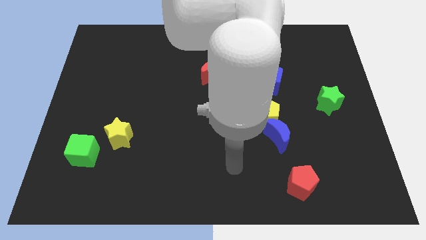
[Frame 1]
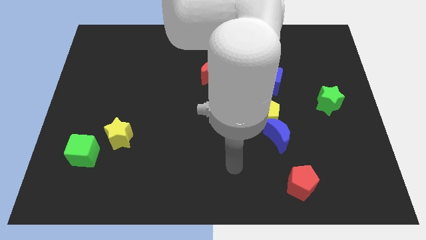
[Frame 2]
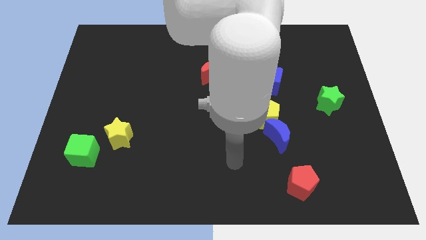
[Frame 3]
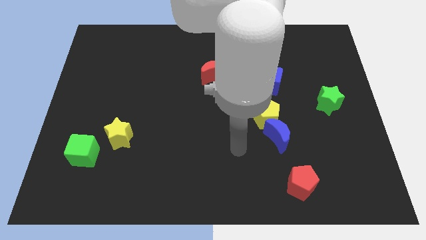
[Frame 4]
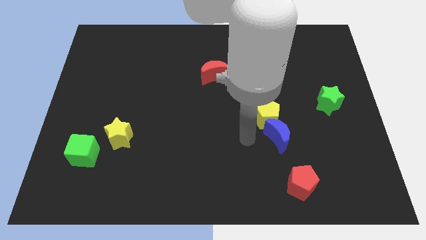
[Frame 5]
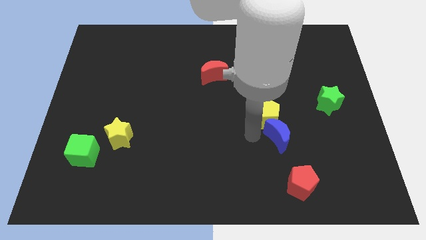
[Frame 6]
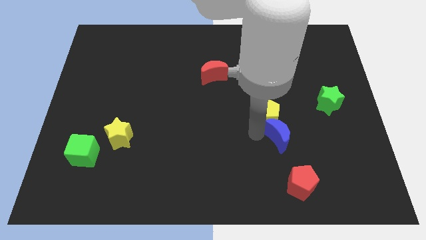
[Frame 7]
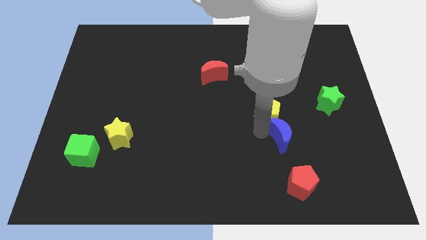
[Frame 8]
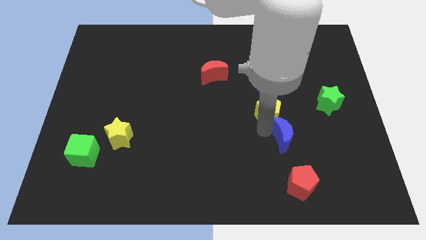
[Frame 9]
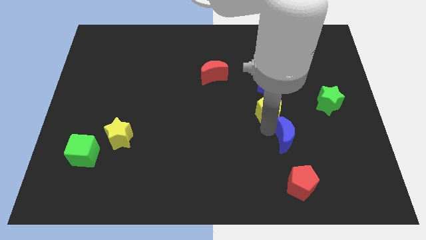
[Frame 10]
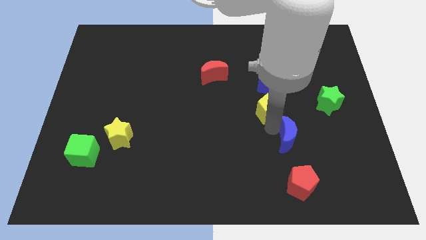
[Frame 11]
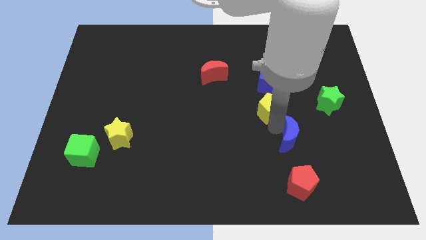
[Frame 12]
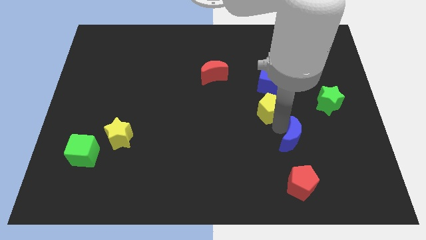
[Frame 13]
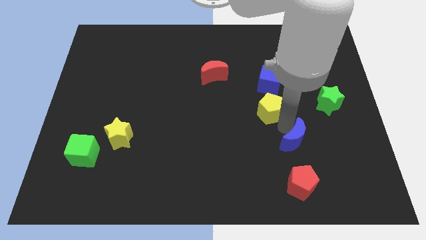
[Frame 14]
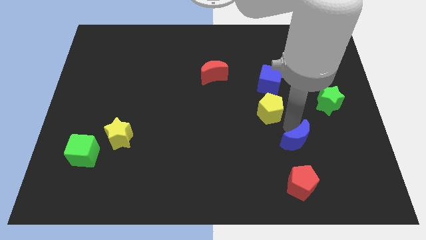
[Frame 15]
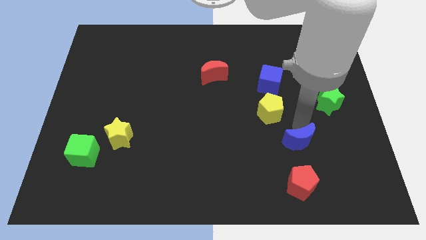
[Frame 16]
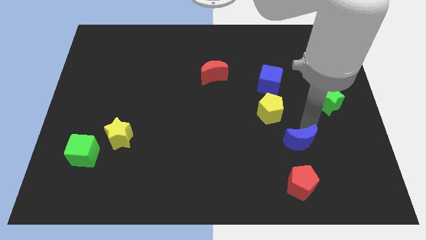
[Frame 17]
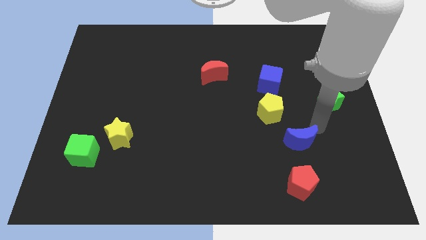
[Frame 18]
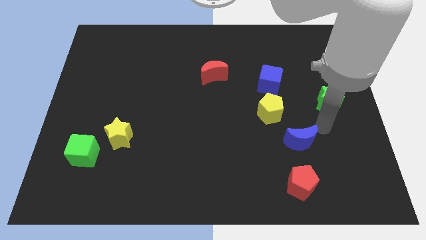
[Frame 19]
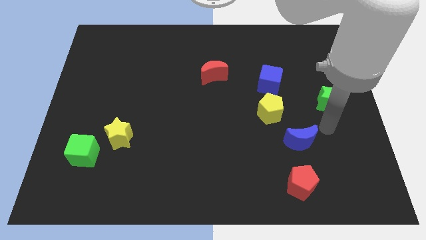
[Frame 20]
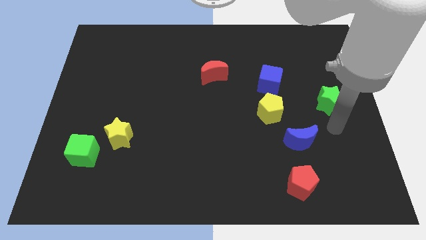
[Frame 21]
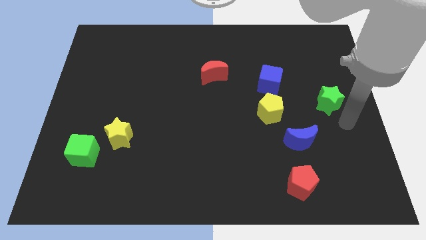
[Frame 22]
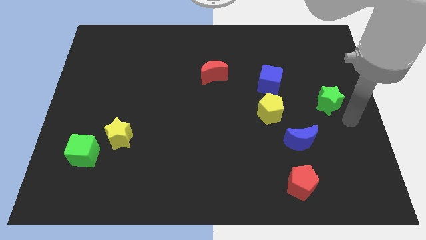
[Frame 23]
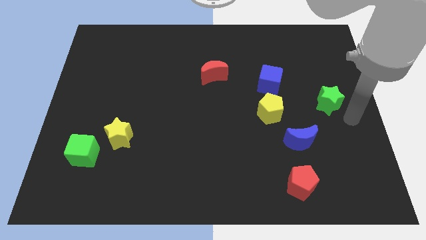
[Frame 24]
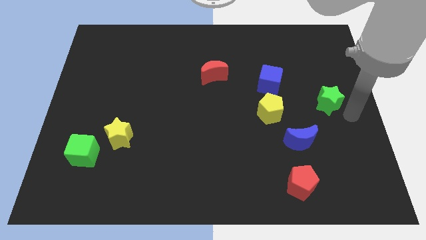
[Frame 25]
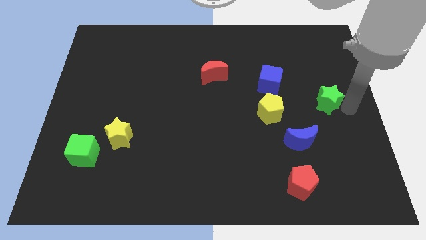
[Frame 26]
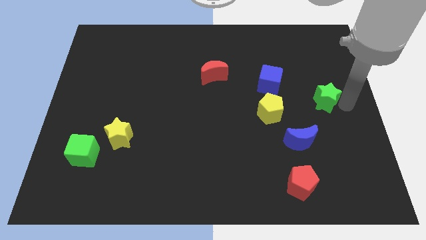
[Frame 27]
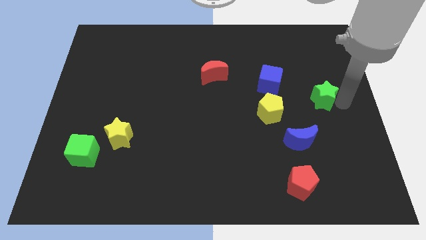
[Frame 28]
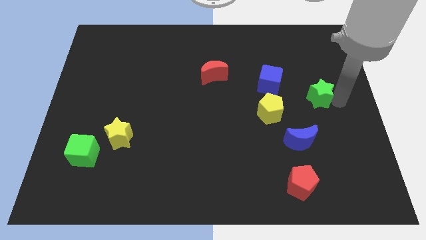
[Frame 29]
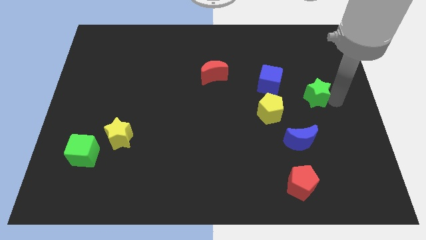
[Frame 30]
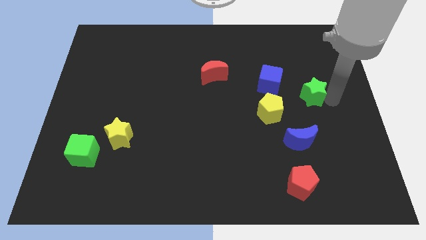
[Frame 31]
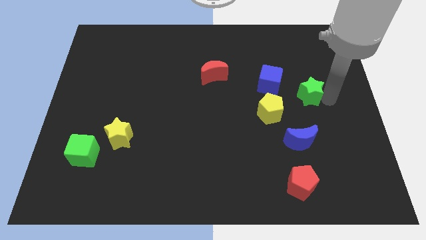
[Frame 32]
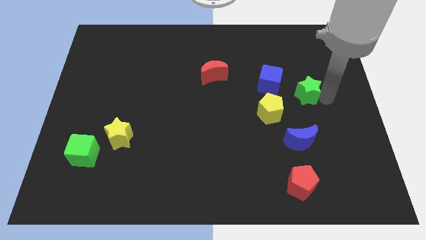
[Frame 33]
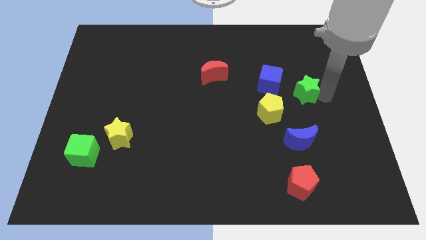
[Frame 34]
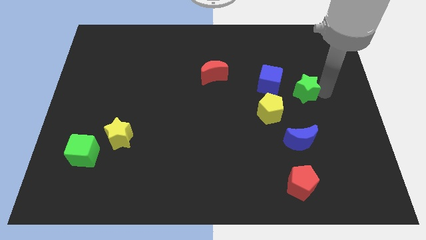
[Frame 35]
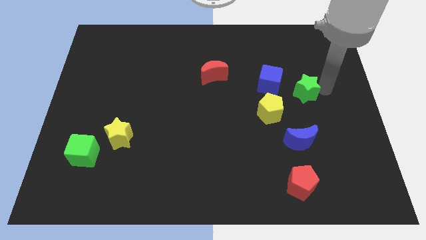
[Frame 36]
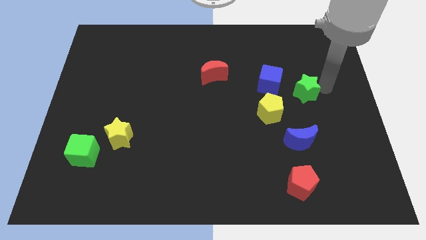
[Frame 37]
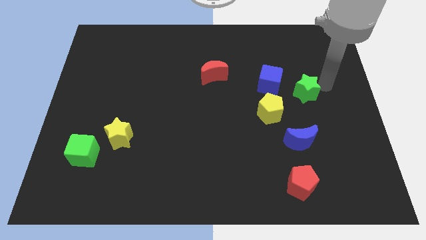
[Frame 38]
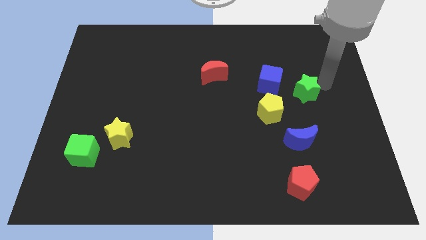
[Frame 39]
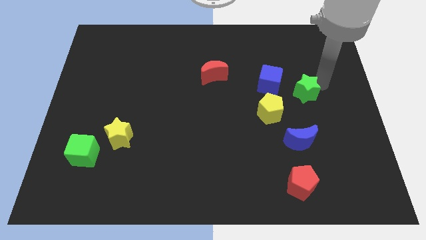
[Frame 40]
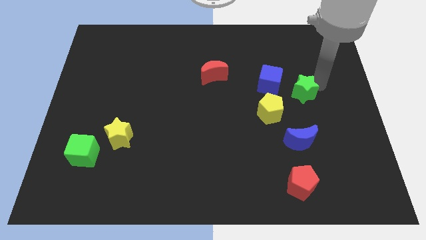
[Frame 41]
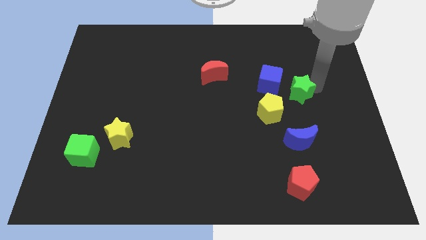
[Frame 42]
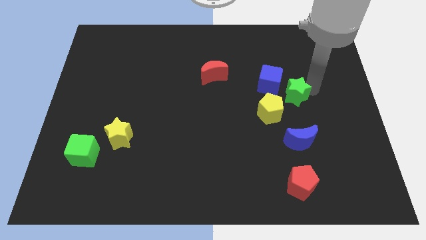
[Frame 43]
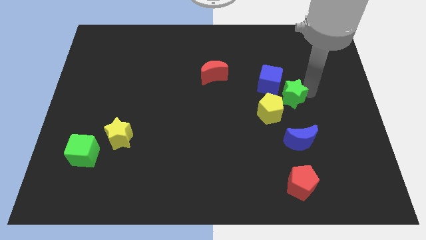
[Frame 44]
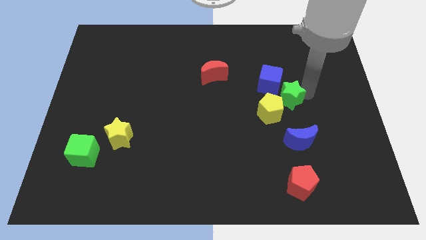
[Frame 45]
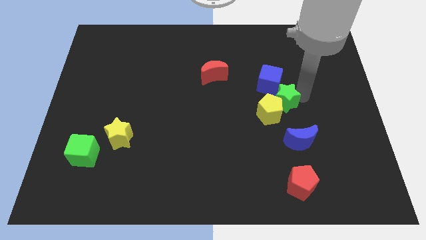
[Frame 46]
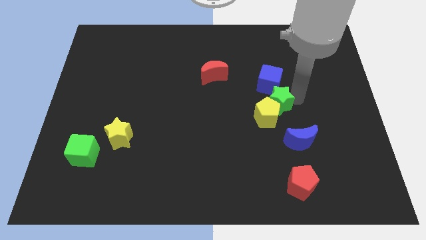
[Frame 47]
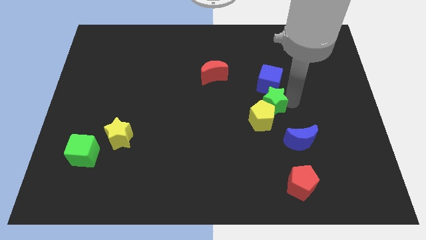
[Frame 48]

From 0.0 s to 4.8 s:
slide the green star towards the yellow pentagon

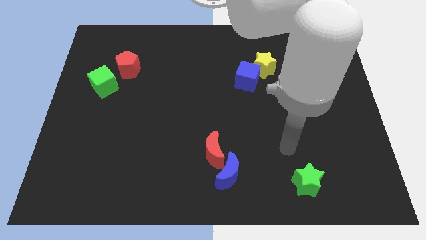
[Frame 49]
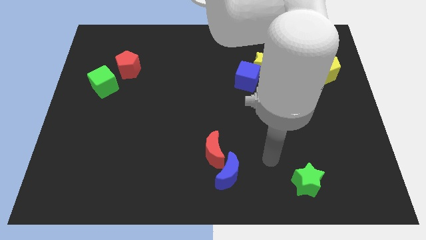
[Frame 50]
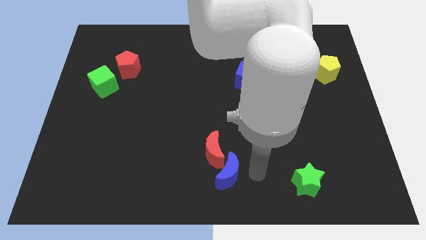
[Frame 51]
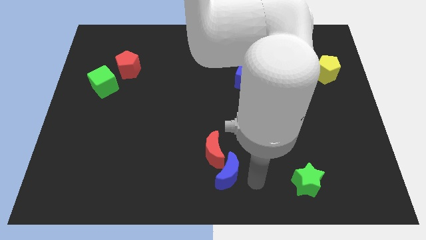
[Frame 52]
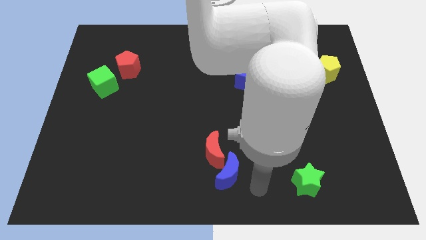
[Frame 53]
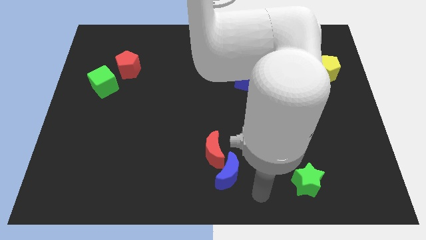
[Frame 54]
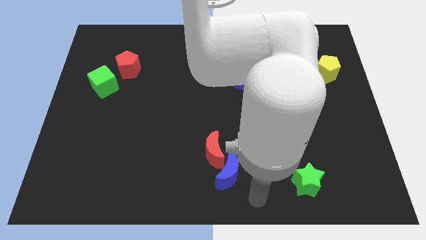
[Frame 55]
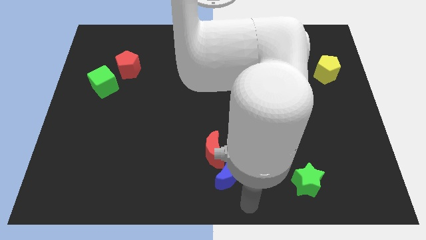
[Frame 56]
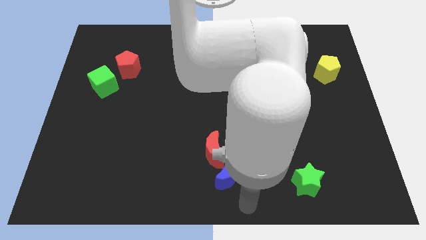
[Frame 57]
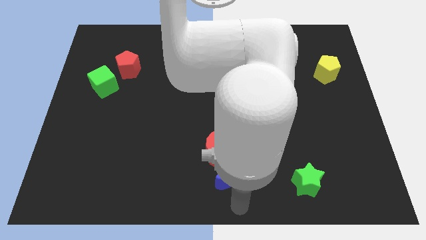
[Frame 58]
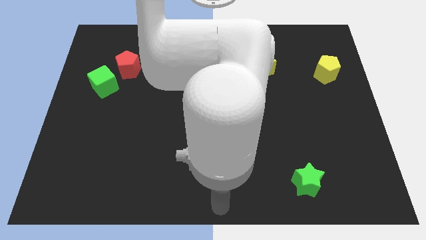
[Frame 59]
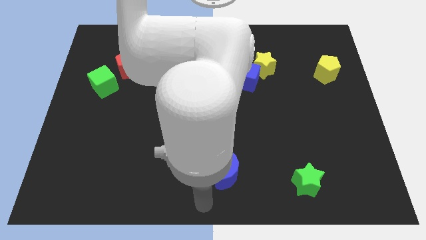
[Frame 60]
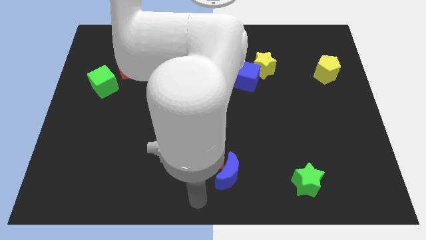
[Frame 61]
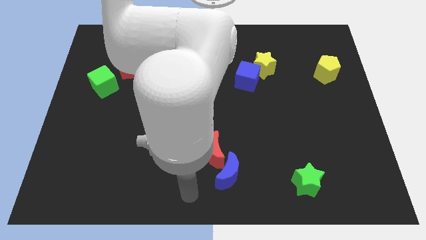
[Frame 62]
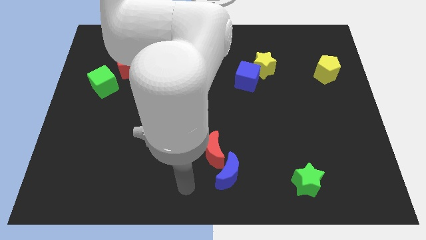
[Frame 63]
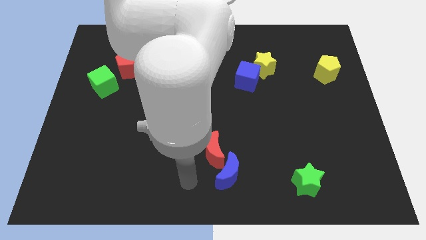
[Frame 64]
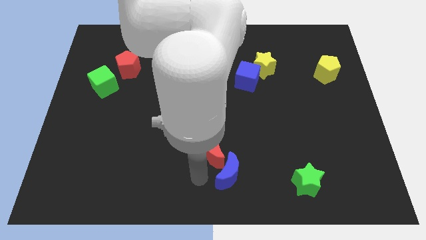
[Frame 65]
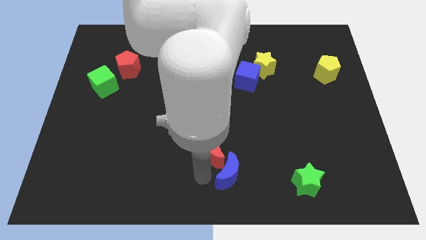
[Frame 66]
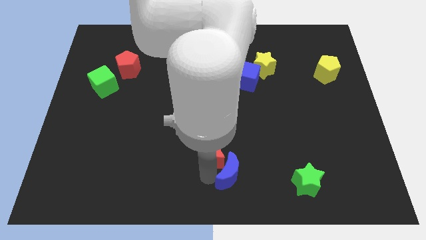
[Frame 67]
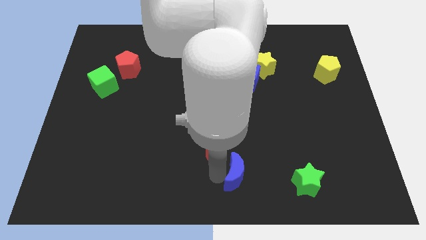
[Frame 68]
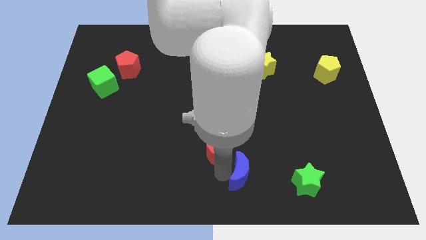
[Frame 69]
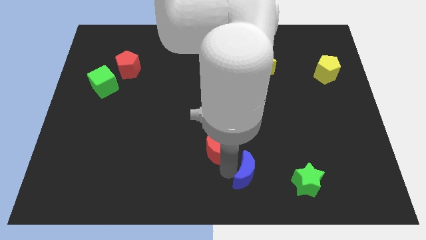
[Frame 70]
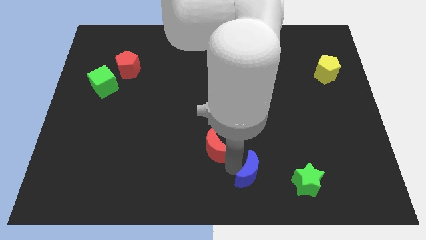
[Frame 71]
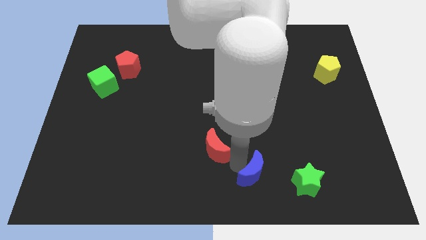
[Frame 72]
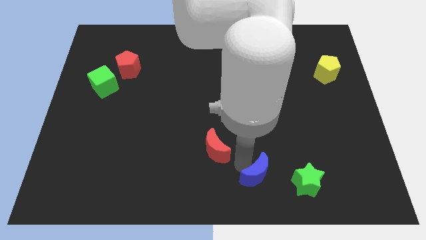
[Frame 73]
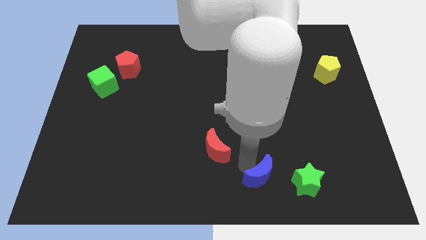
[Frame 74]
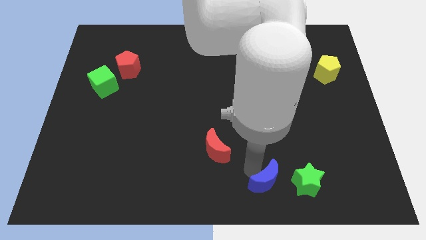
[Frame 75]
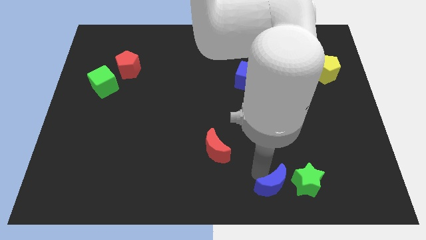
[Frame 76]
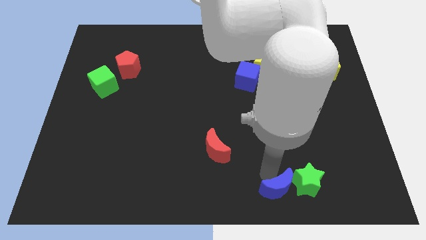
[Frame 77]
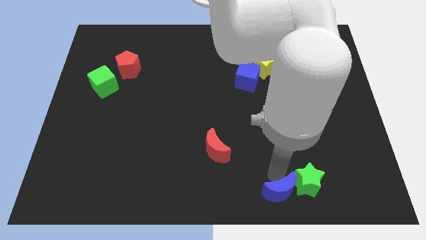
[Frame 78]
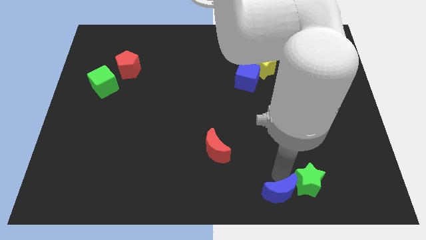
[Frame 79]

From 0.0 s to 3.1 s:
put the blue moon next to the green star

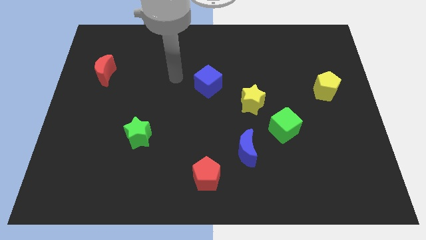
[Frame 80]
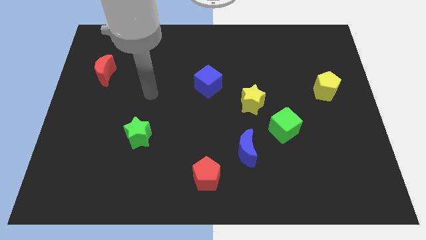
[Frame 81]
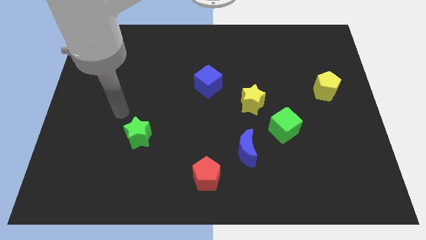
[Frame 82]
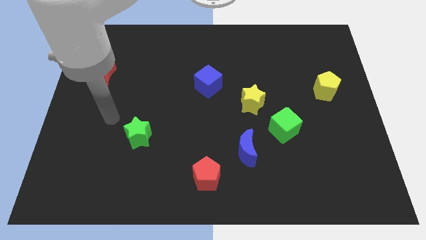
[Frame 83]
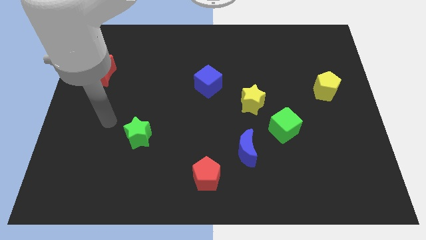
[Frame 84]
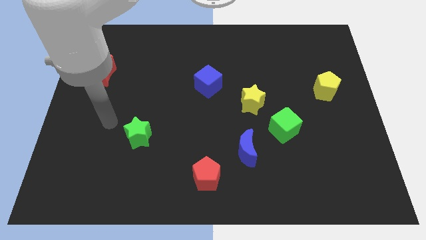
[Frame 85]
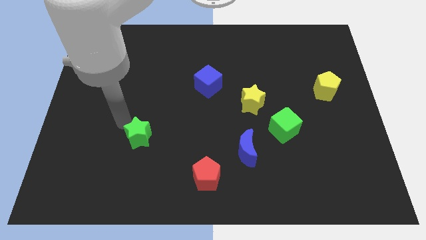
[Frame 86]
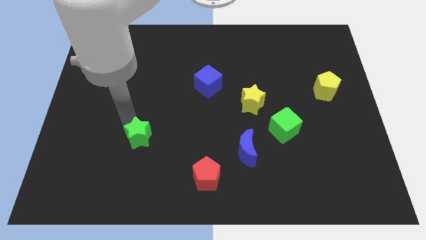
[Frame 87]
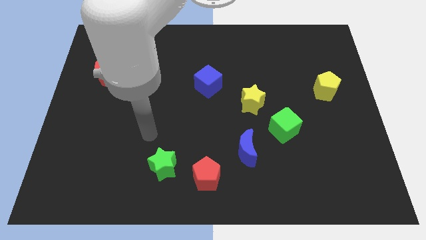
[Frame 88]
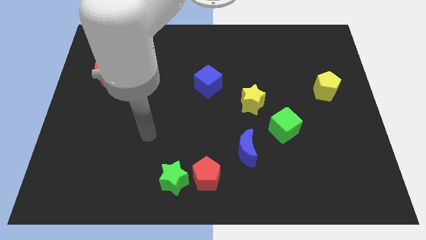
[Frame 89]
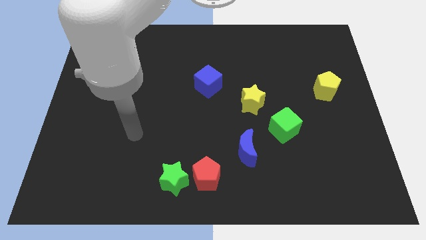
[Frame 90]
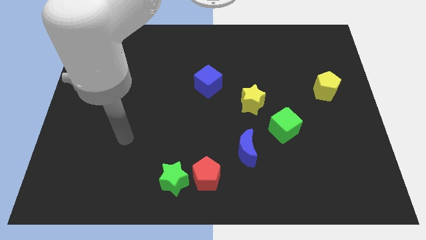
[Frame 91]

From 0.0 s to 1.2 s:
move the green star to the red pentagon
